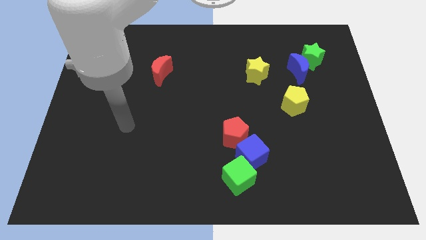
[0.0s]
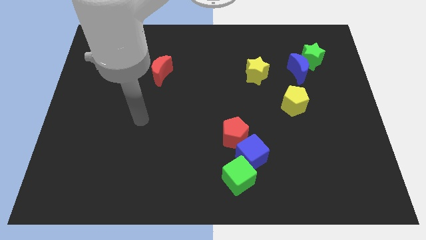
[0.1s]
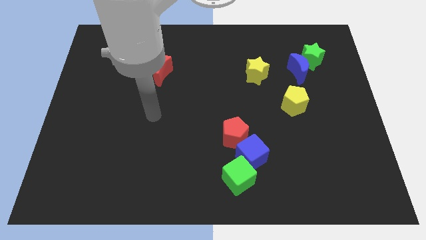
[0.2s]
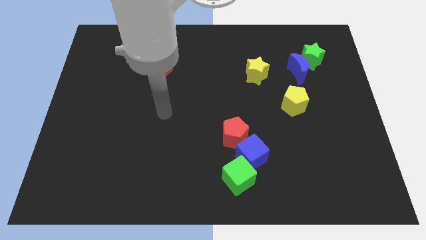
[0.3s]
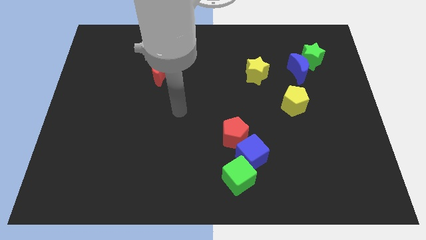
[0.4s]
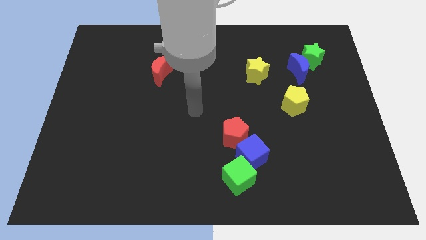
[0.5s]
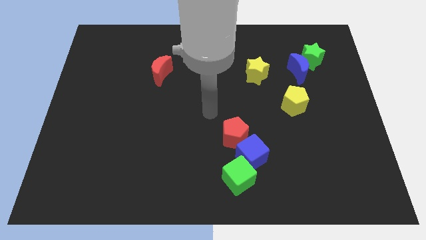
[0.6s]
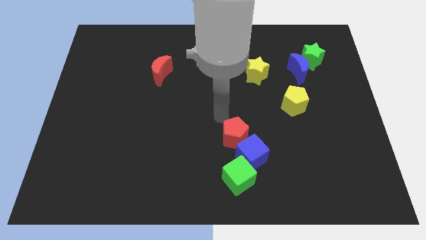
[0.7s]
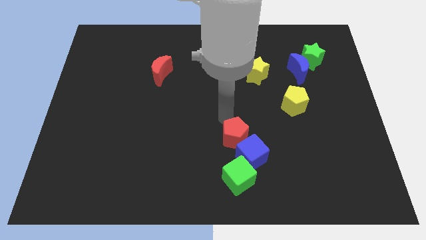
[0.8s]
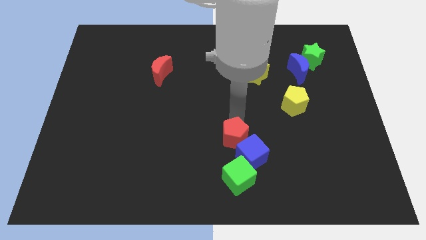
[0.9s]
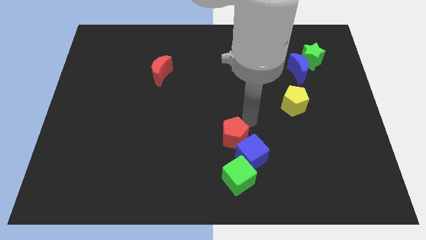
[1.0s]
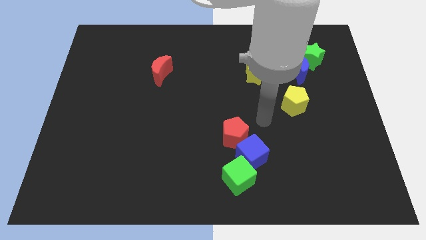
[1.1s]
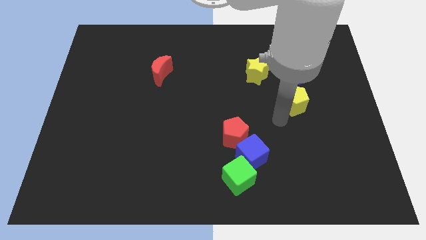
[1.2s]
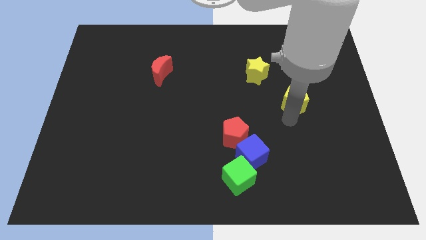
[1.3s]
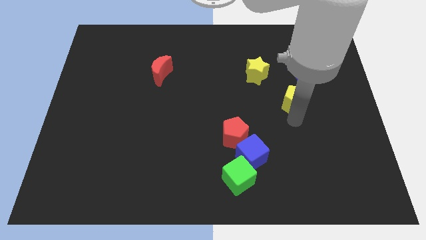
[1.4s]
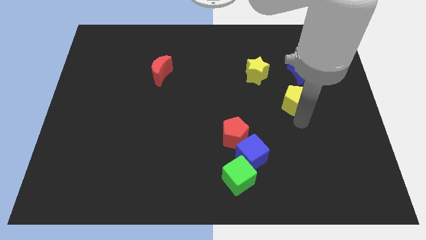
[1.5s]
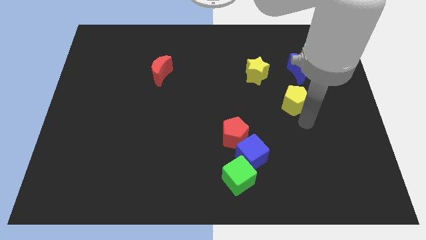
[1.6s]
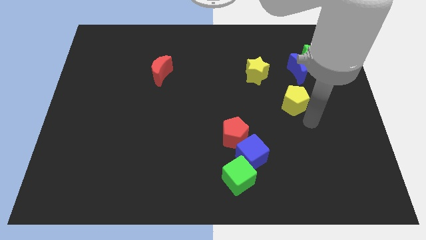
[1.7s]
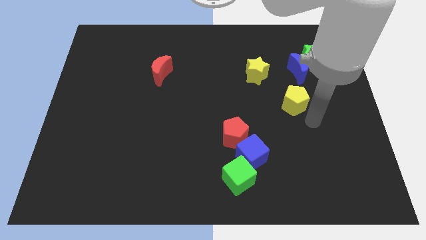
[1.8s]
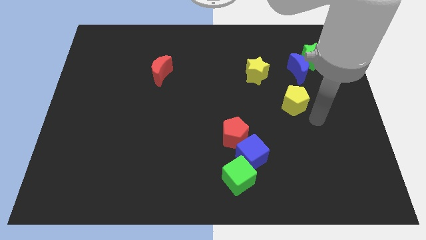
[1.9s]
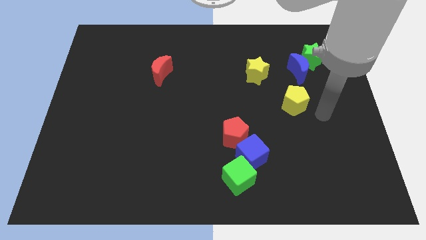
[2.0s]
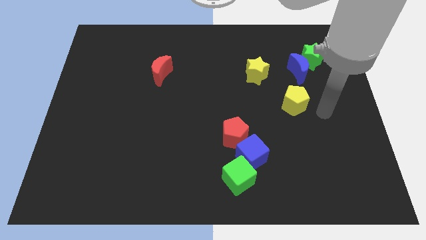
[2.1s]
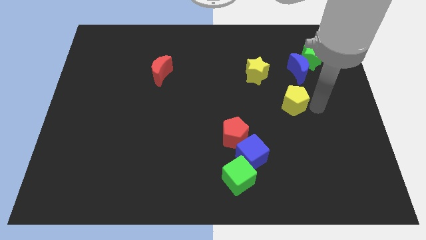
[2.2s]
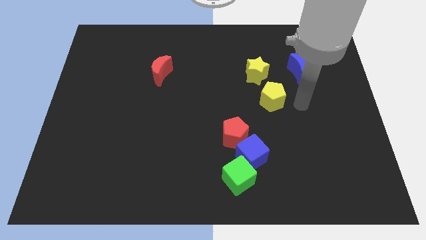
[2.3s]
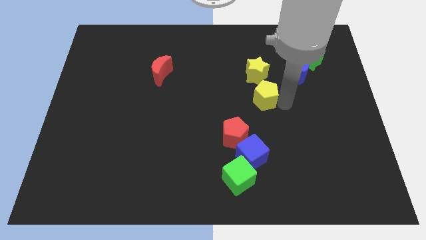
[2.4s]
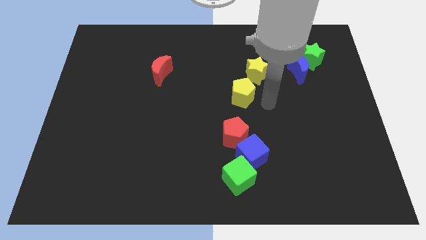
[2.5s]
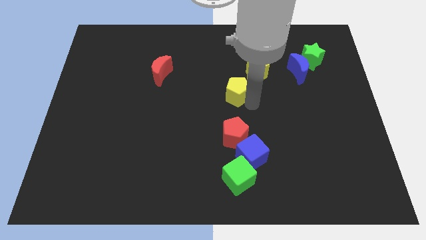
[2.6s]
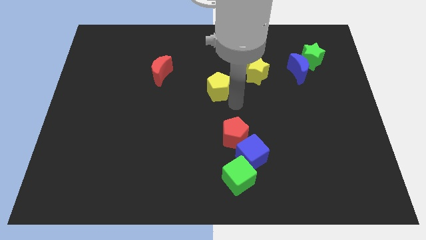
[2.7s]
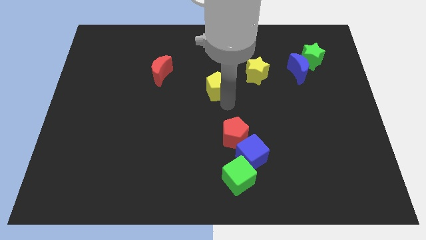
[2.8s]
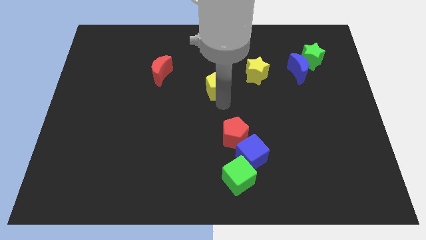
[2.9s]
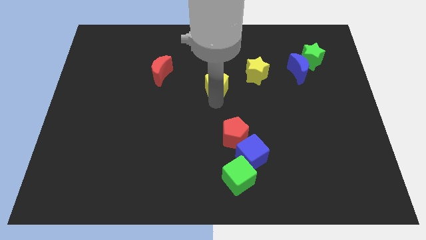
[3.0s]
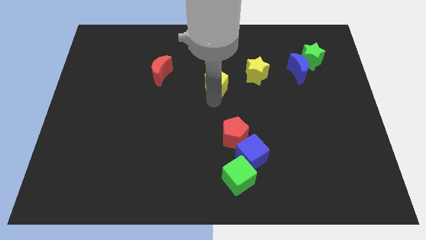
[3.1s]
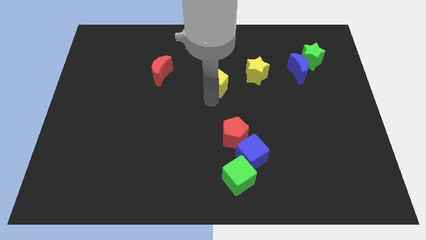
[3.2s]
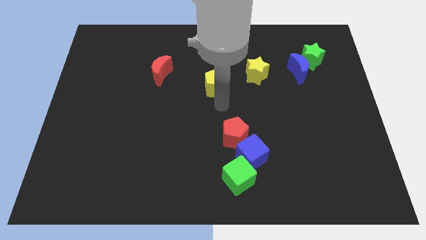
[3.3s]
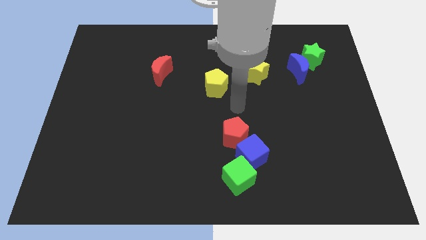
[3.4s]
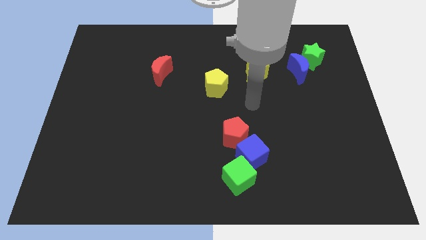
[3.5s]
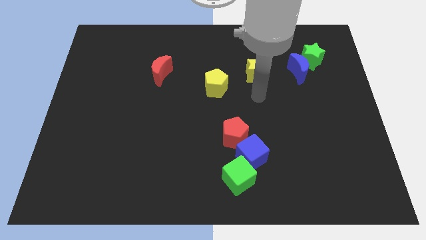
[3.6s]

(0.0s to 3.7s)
push the yellow pentagon towards the center of the board

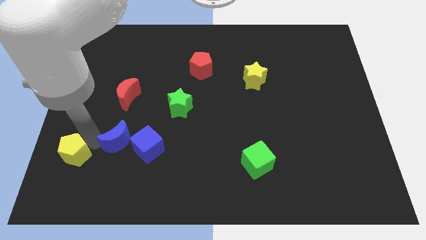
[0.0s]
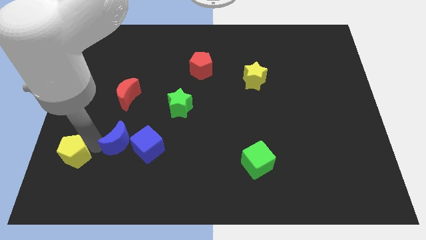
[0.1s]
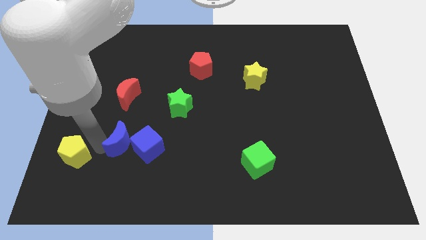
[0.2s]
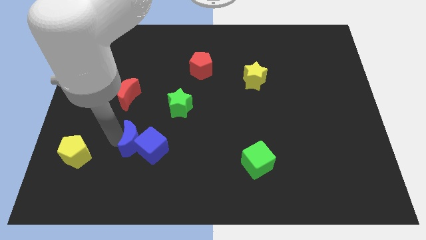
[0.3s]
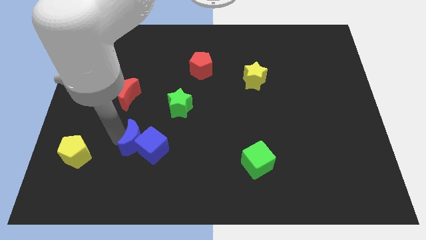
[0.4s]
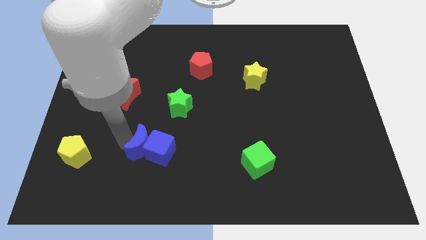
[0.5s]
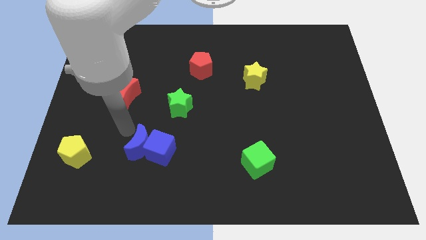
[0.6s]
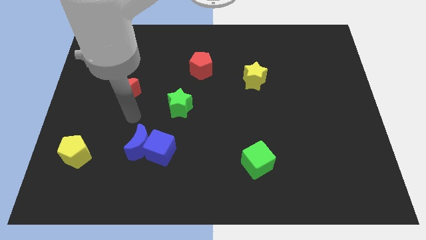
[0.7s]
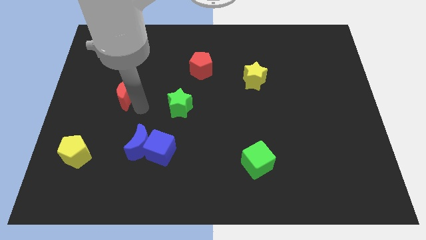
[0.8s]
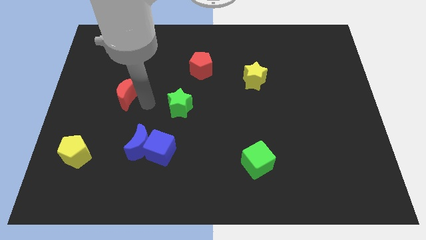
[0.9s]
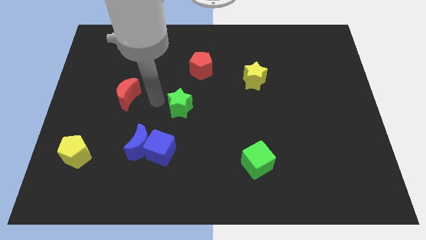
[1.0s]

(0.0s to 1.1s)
move the blue blocks slightly to the right

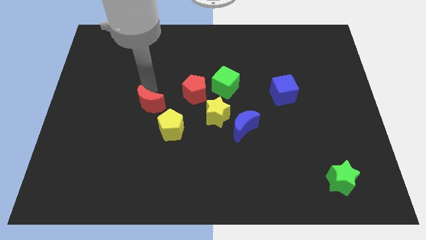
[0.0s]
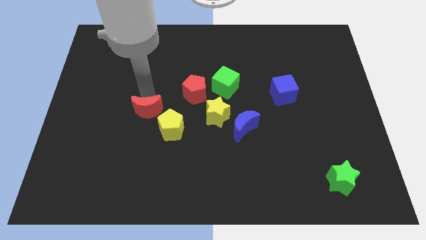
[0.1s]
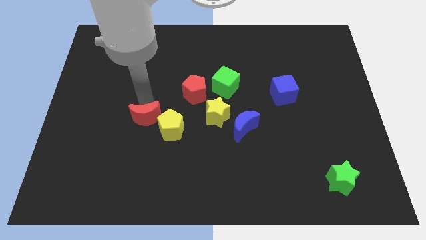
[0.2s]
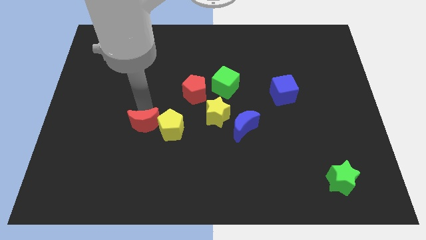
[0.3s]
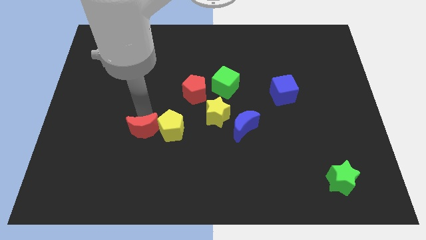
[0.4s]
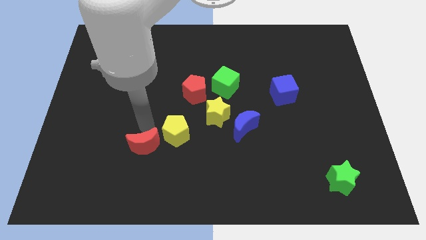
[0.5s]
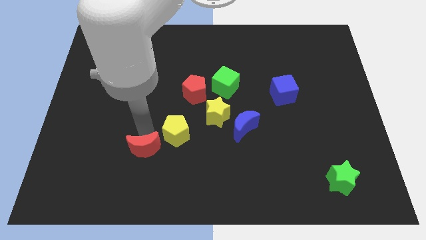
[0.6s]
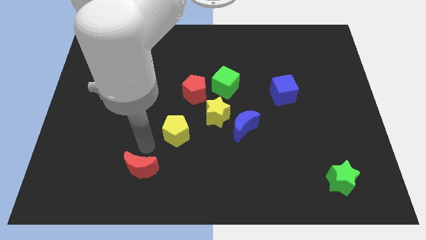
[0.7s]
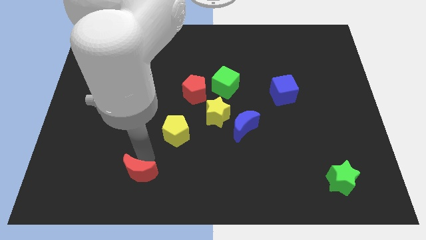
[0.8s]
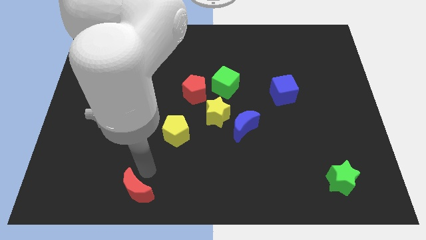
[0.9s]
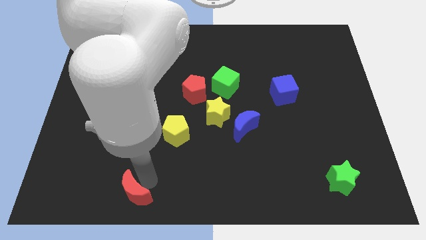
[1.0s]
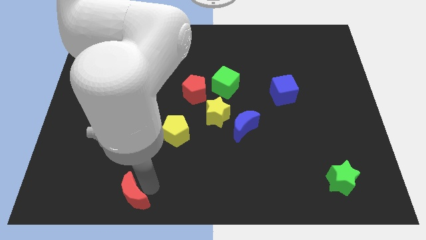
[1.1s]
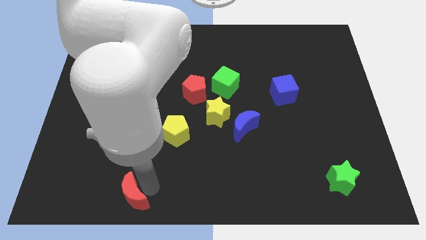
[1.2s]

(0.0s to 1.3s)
place the red crescent in the bottom center

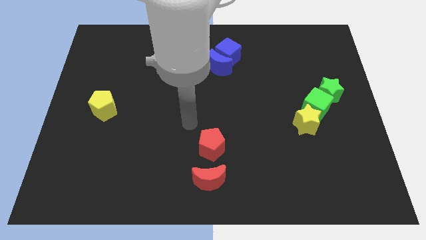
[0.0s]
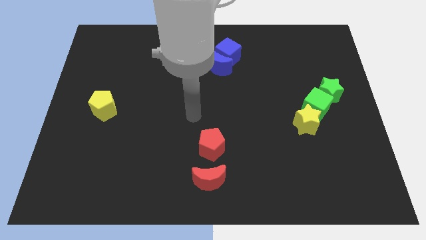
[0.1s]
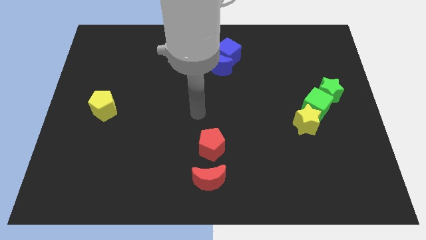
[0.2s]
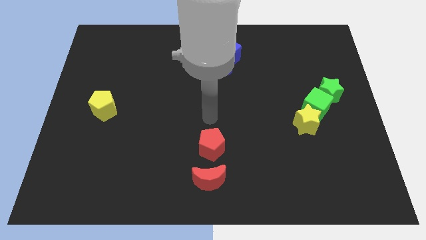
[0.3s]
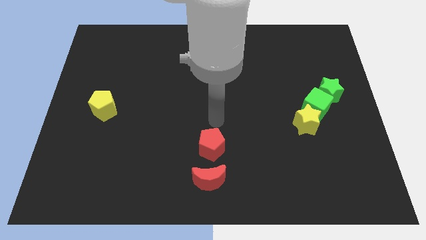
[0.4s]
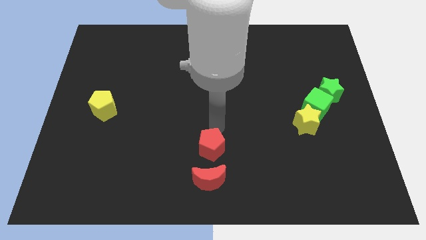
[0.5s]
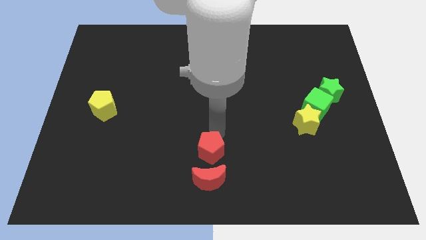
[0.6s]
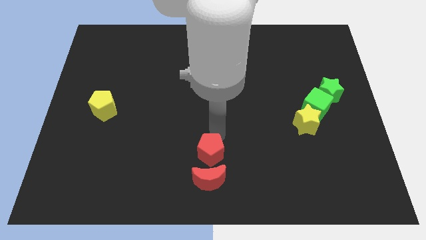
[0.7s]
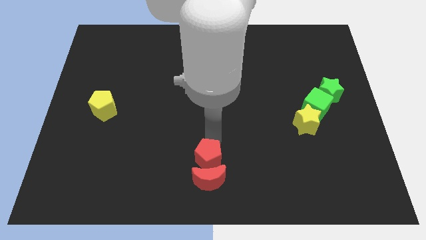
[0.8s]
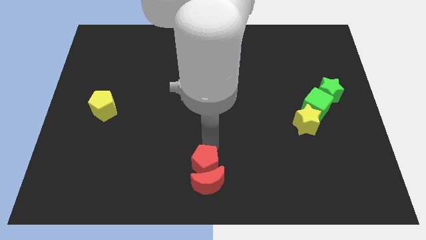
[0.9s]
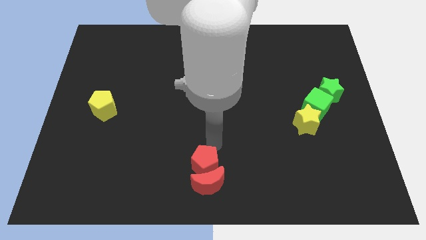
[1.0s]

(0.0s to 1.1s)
move red pentagon into red moon

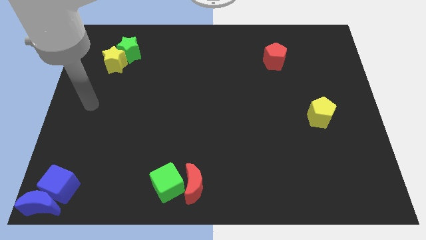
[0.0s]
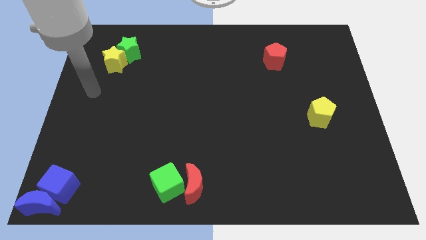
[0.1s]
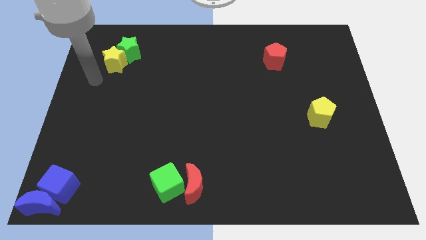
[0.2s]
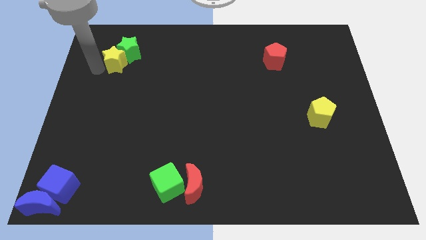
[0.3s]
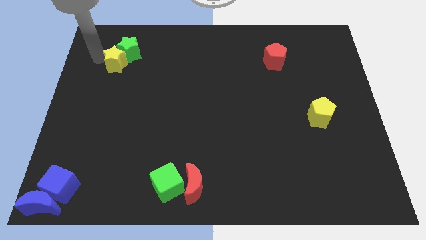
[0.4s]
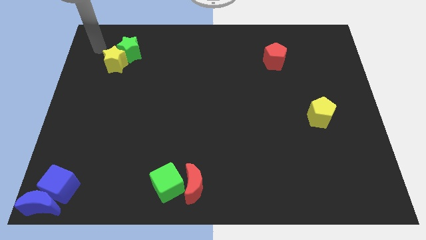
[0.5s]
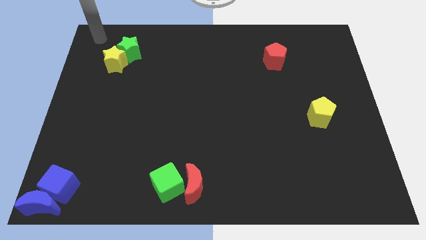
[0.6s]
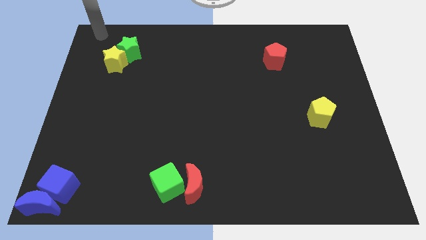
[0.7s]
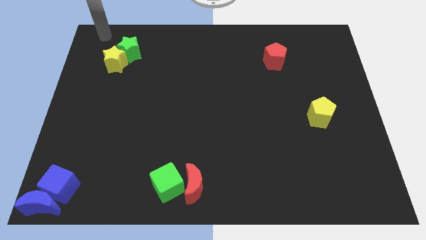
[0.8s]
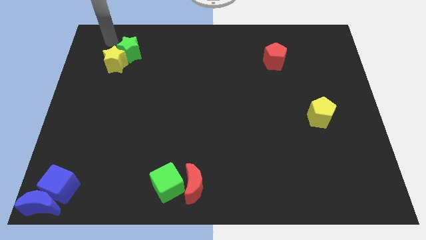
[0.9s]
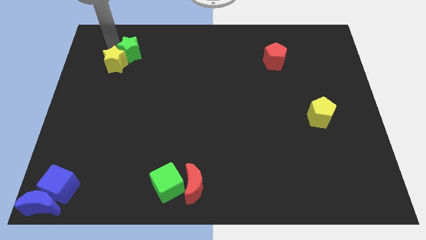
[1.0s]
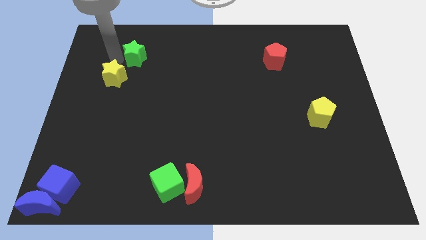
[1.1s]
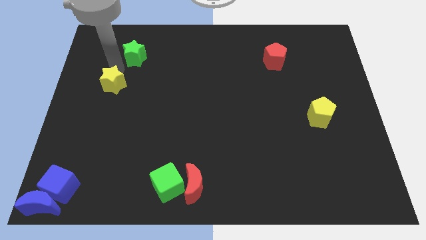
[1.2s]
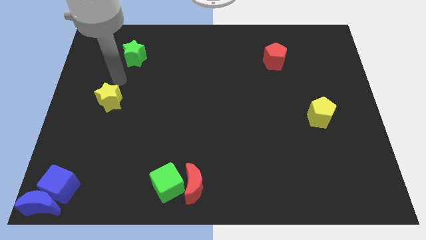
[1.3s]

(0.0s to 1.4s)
separate yellow star from green star

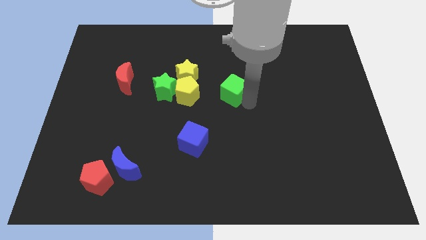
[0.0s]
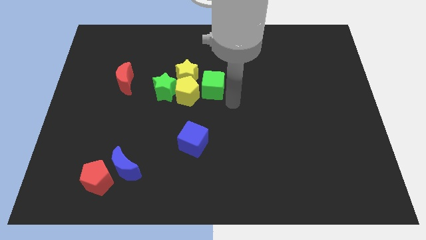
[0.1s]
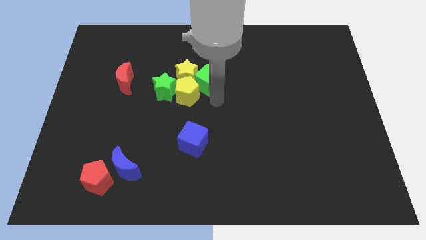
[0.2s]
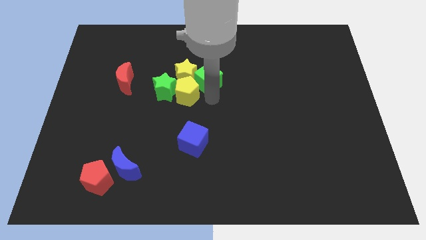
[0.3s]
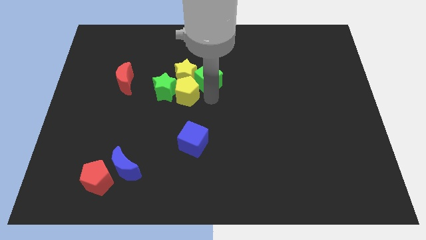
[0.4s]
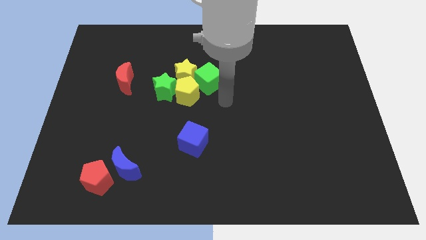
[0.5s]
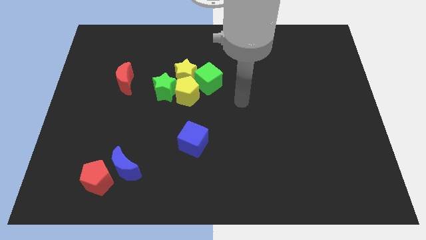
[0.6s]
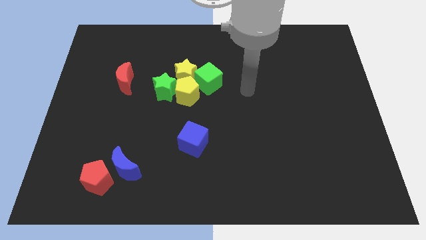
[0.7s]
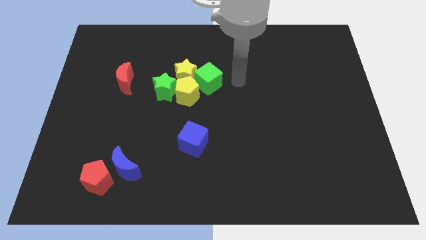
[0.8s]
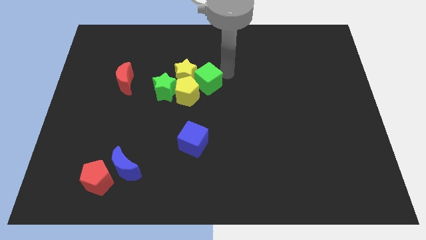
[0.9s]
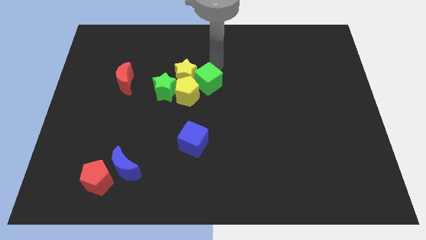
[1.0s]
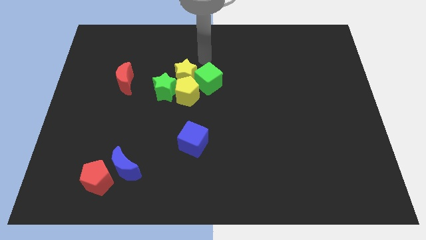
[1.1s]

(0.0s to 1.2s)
push the green cube into the yellow star
